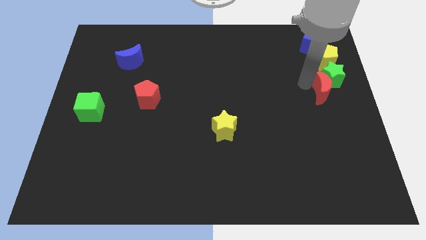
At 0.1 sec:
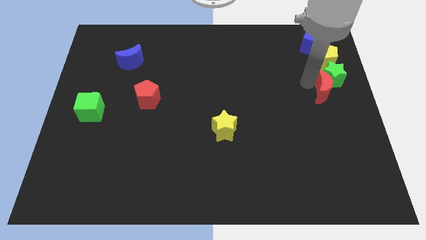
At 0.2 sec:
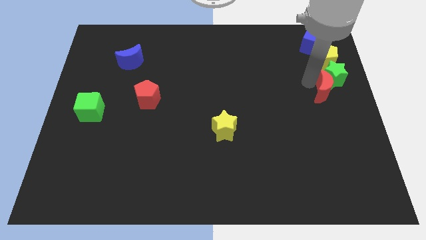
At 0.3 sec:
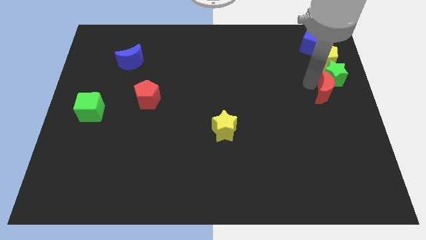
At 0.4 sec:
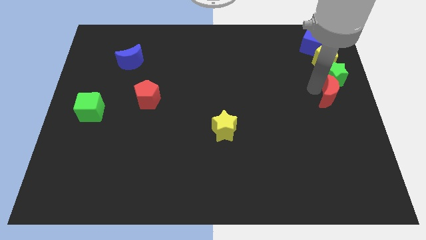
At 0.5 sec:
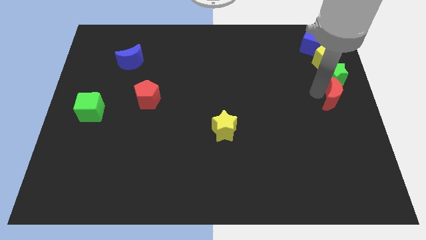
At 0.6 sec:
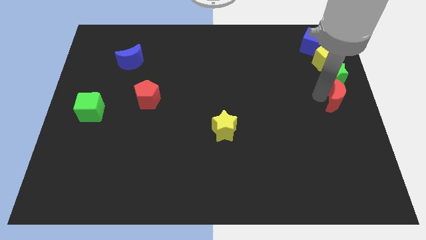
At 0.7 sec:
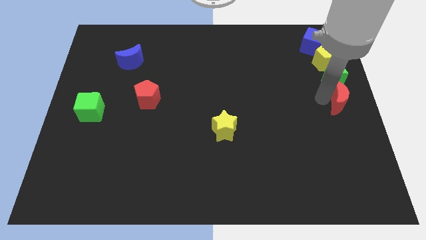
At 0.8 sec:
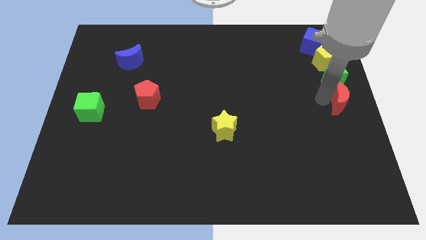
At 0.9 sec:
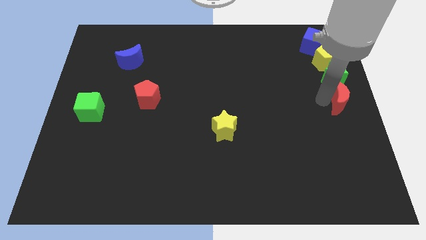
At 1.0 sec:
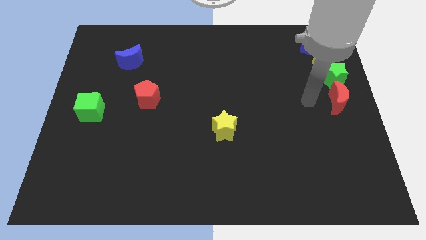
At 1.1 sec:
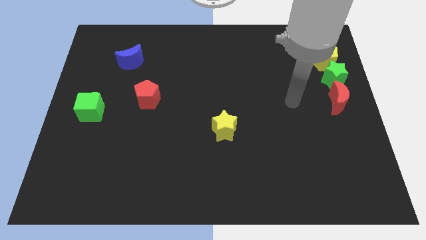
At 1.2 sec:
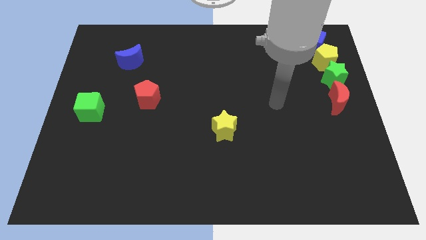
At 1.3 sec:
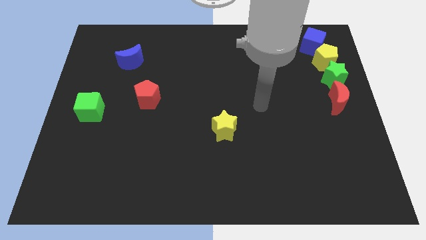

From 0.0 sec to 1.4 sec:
put the red moon underneath the green star

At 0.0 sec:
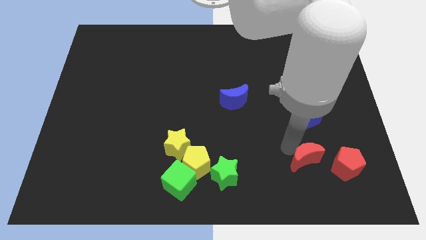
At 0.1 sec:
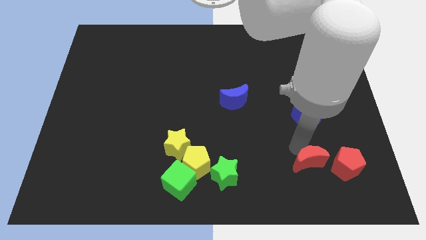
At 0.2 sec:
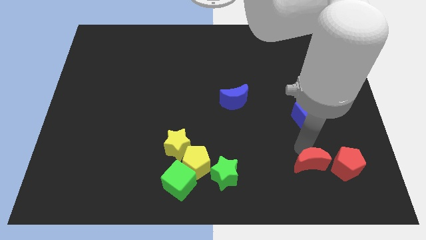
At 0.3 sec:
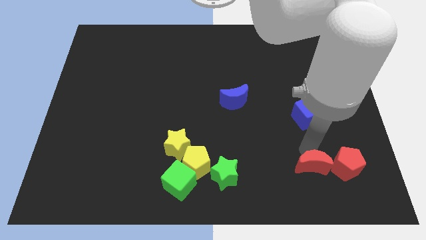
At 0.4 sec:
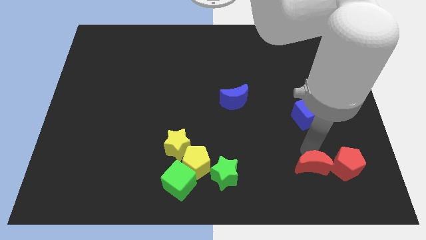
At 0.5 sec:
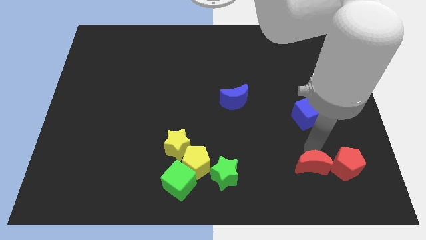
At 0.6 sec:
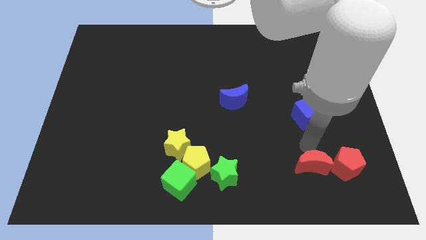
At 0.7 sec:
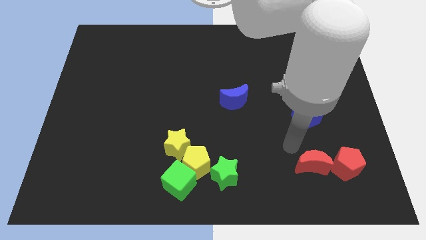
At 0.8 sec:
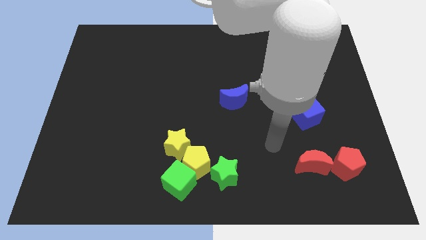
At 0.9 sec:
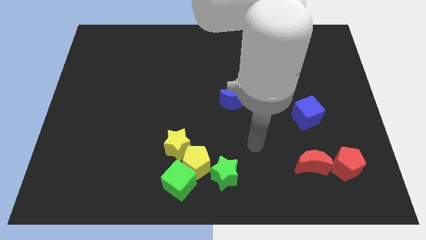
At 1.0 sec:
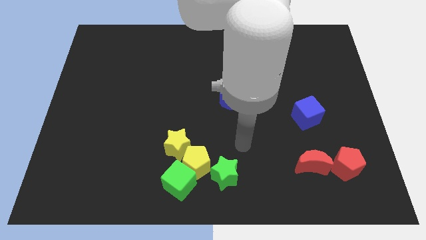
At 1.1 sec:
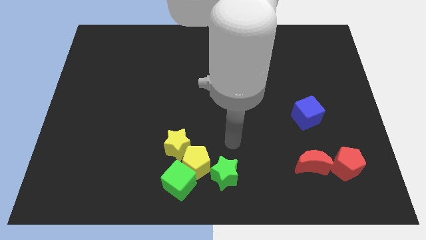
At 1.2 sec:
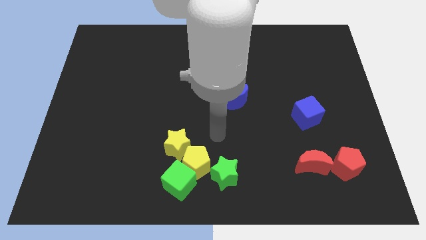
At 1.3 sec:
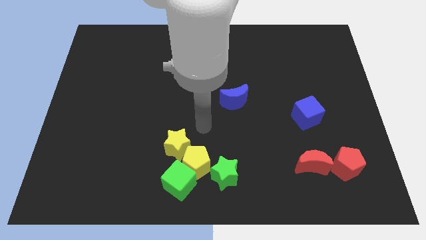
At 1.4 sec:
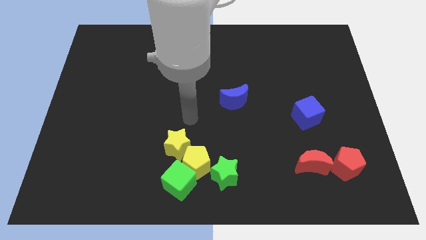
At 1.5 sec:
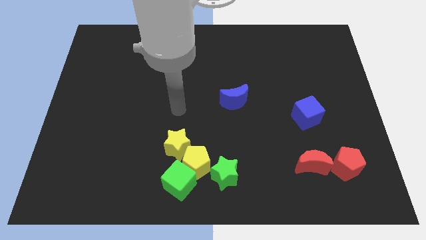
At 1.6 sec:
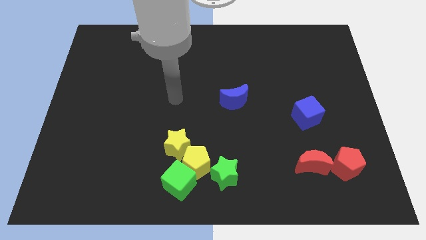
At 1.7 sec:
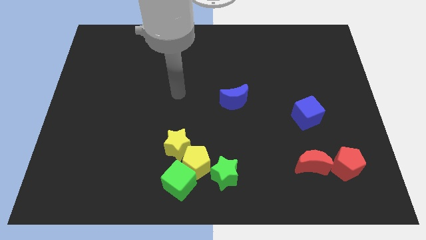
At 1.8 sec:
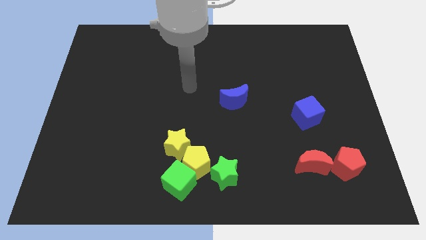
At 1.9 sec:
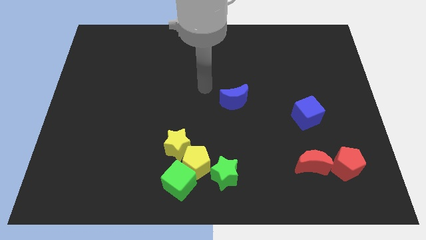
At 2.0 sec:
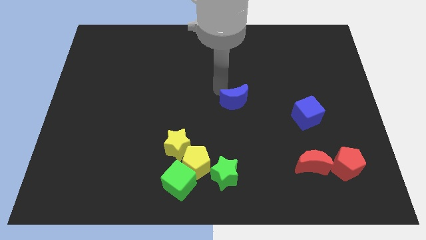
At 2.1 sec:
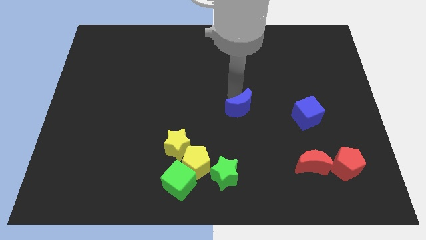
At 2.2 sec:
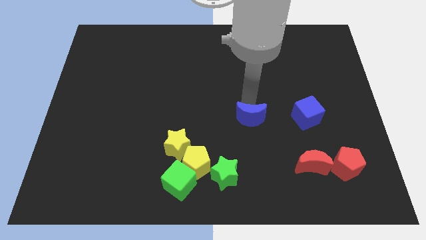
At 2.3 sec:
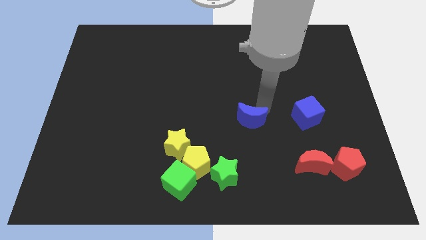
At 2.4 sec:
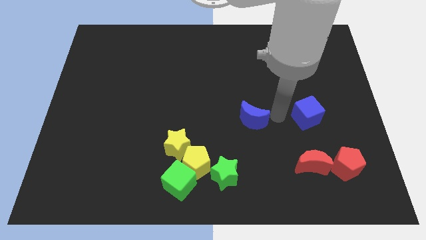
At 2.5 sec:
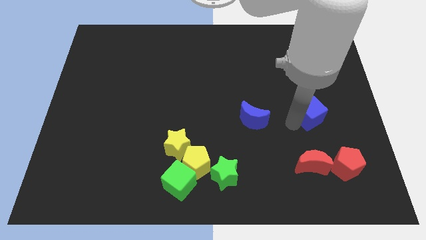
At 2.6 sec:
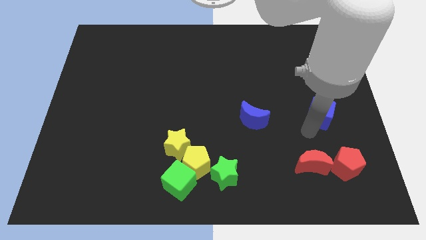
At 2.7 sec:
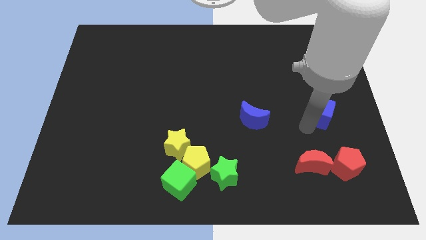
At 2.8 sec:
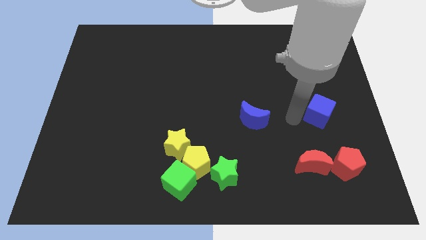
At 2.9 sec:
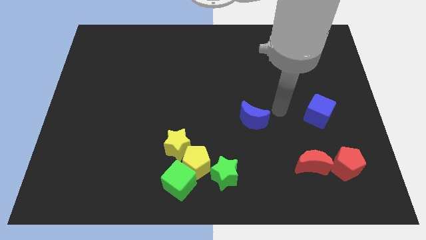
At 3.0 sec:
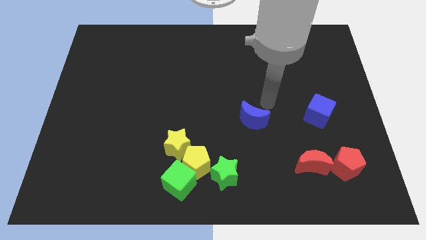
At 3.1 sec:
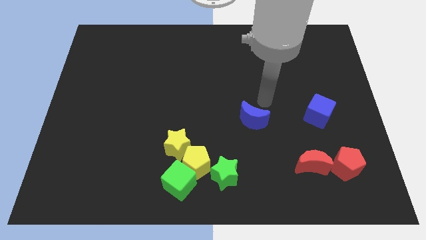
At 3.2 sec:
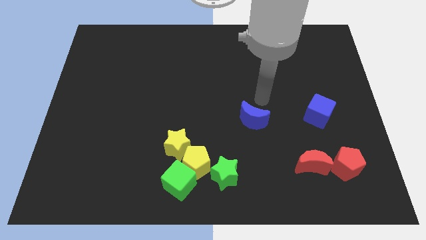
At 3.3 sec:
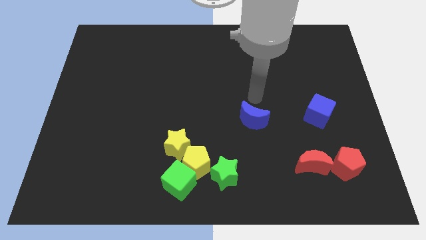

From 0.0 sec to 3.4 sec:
slightly move the blue blocks to the right of the board

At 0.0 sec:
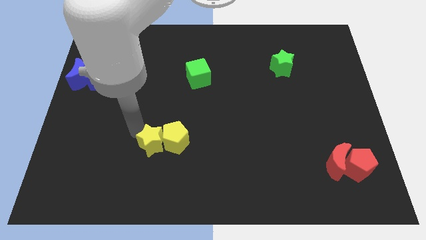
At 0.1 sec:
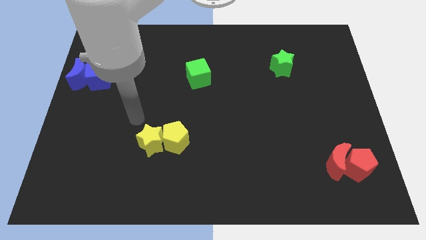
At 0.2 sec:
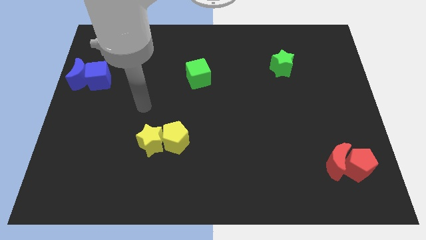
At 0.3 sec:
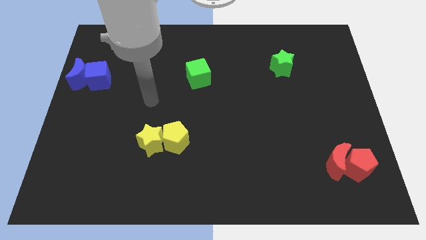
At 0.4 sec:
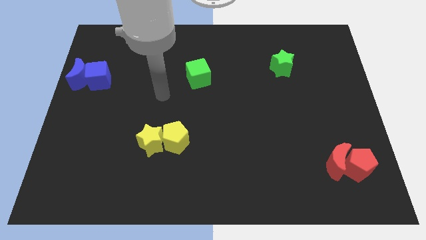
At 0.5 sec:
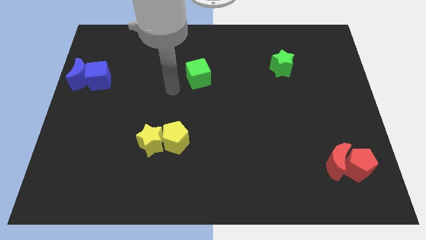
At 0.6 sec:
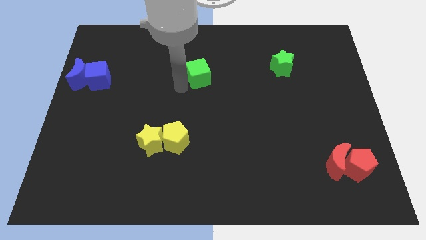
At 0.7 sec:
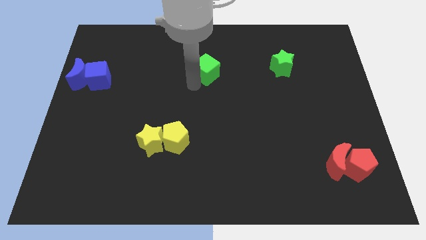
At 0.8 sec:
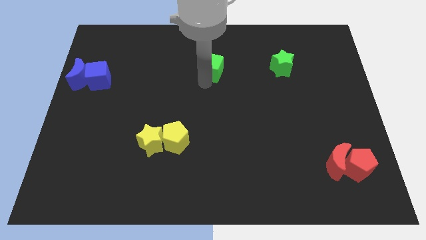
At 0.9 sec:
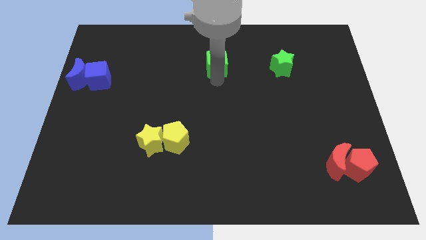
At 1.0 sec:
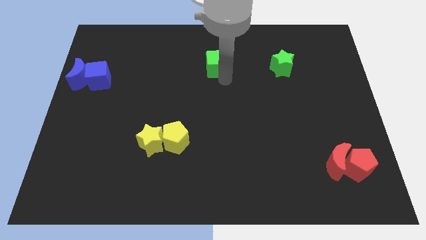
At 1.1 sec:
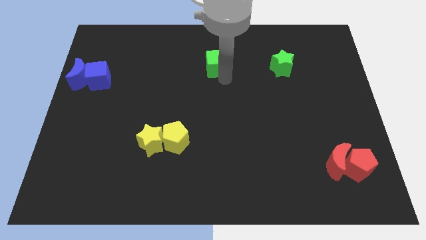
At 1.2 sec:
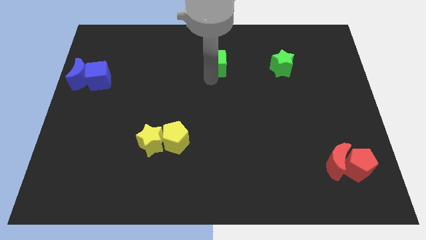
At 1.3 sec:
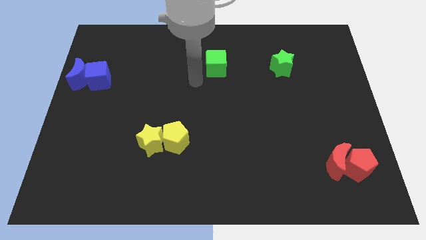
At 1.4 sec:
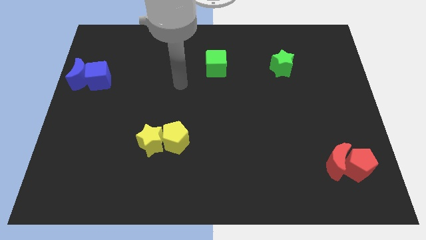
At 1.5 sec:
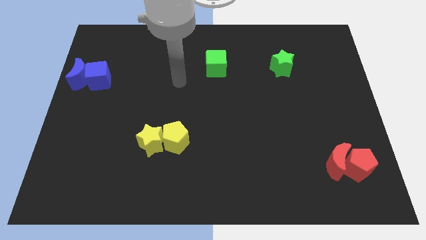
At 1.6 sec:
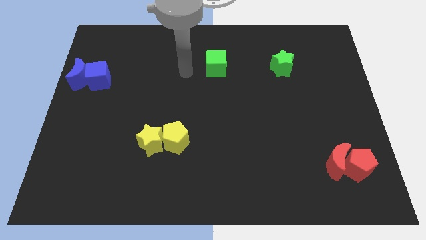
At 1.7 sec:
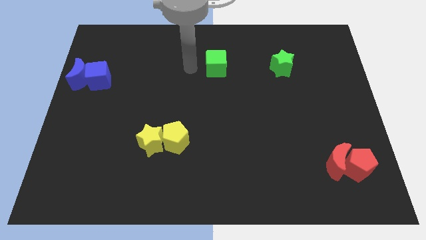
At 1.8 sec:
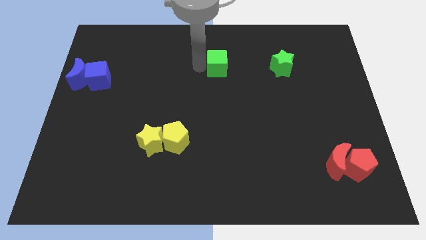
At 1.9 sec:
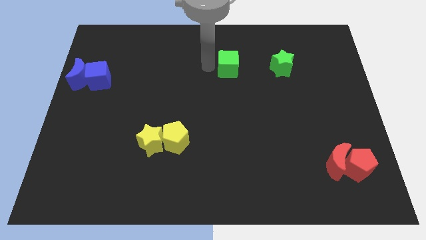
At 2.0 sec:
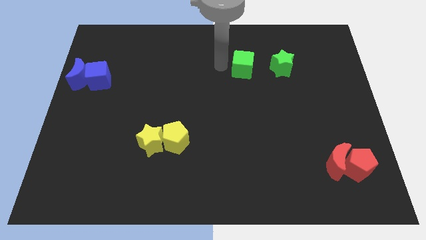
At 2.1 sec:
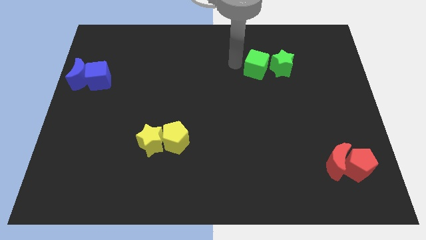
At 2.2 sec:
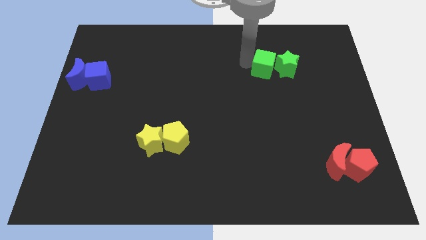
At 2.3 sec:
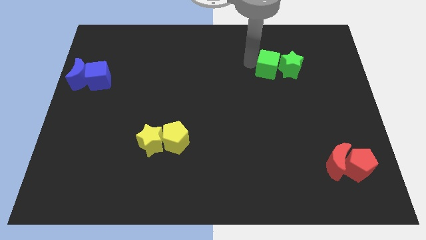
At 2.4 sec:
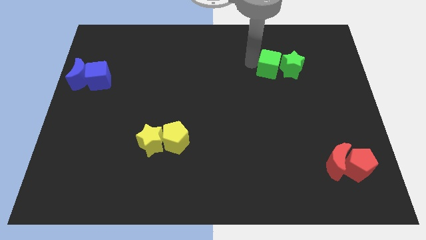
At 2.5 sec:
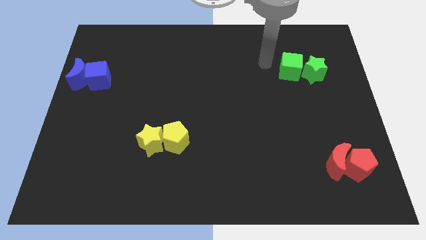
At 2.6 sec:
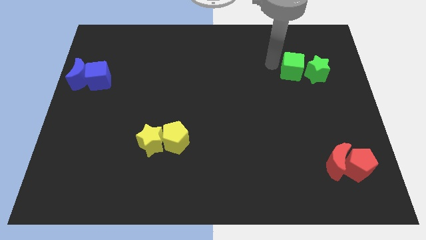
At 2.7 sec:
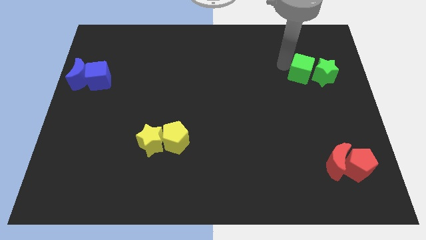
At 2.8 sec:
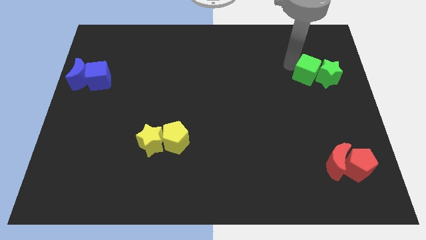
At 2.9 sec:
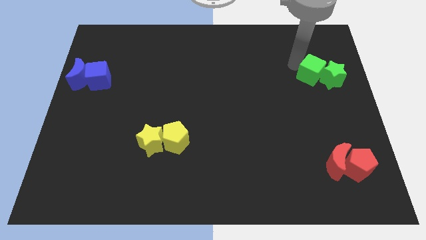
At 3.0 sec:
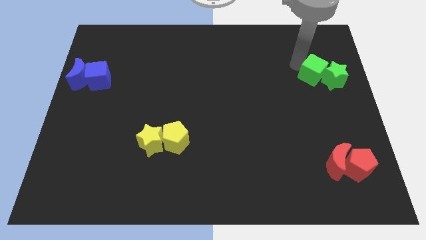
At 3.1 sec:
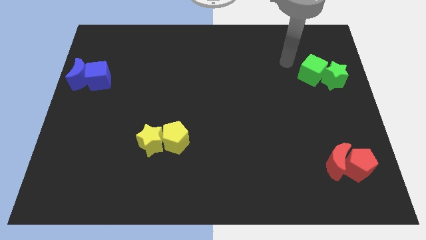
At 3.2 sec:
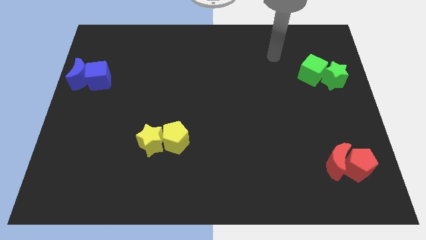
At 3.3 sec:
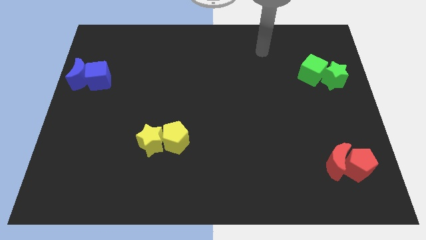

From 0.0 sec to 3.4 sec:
push the green cube into the green star

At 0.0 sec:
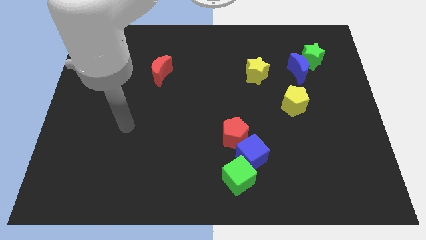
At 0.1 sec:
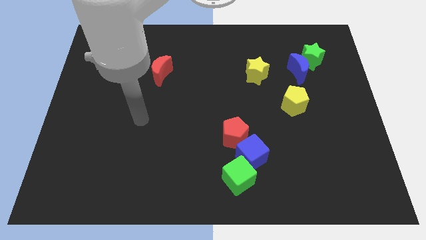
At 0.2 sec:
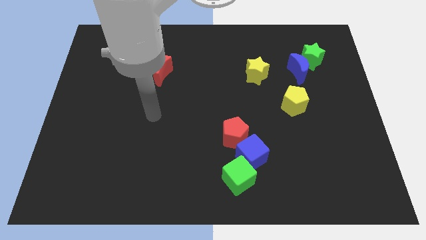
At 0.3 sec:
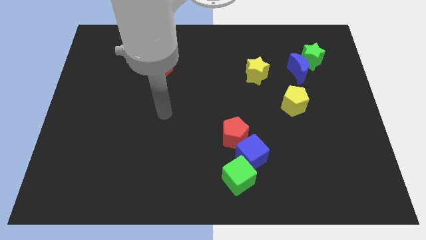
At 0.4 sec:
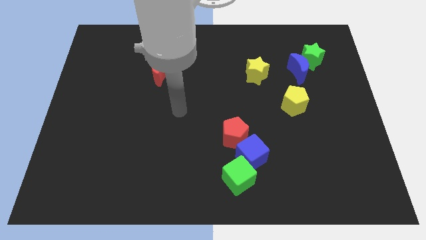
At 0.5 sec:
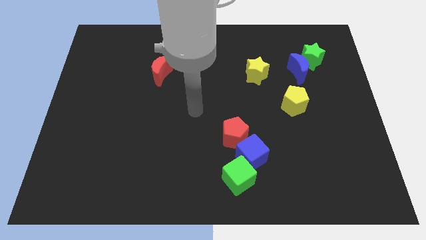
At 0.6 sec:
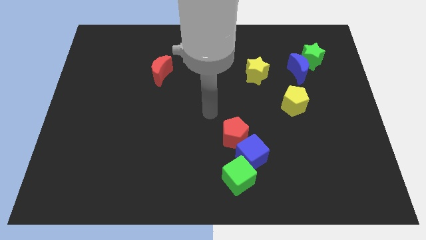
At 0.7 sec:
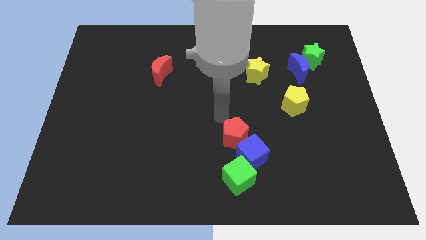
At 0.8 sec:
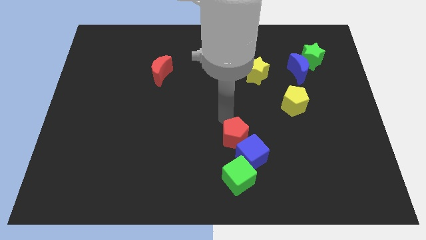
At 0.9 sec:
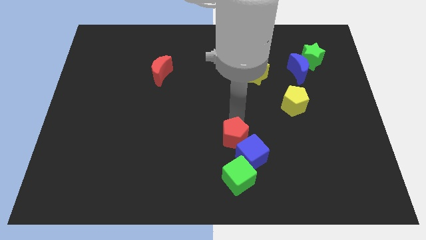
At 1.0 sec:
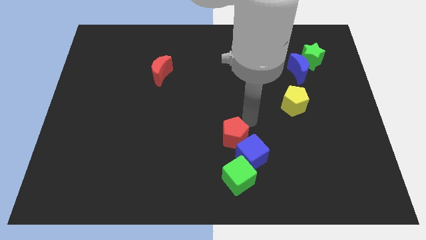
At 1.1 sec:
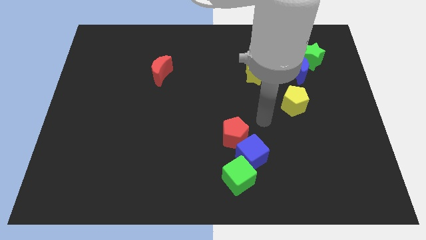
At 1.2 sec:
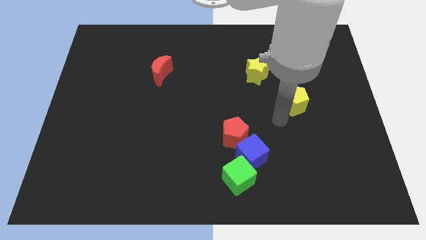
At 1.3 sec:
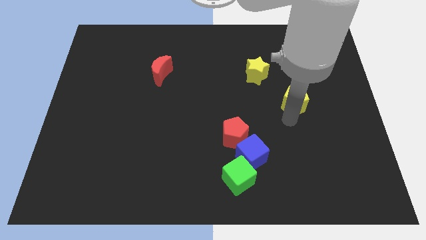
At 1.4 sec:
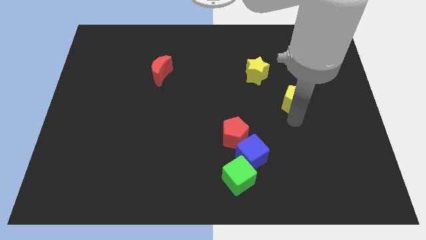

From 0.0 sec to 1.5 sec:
move your arm towards the right side of the board
